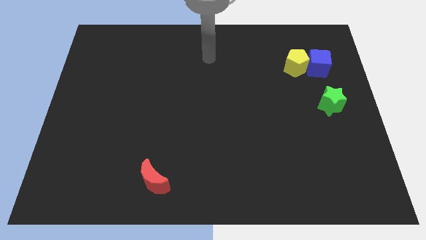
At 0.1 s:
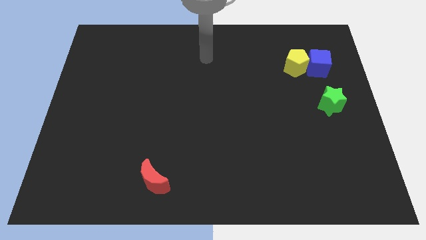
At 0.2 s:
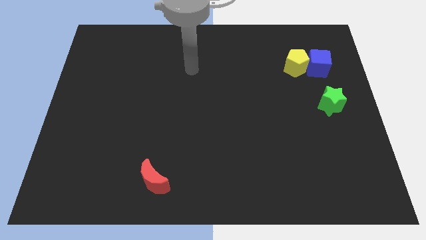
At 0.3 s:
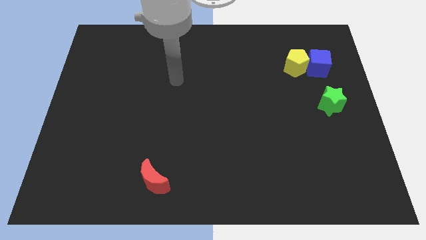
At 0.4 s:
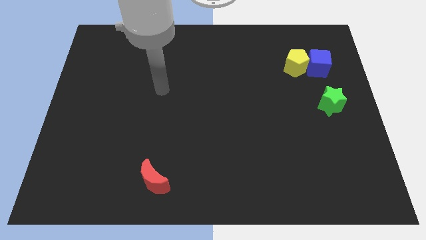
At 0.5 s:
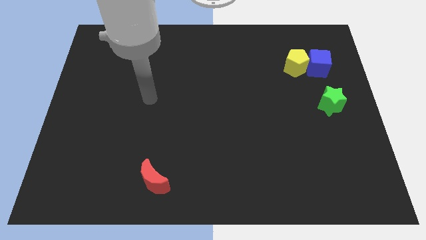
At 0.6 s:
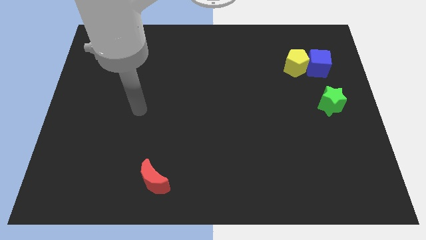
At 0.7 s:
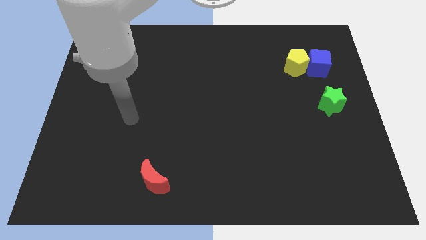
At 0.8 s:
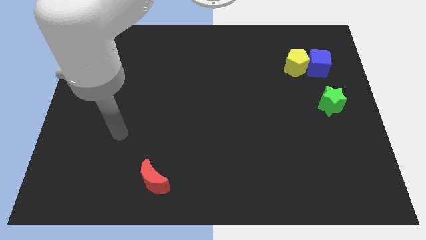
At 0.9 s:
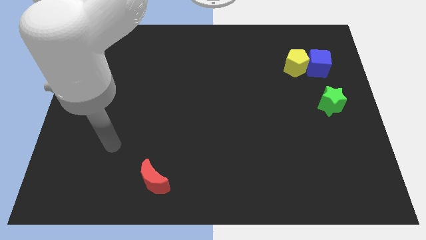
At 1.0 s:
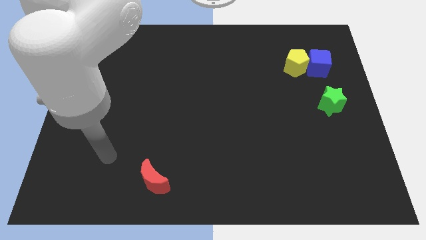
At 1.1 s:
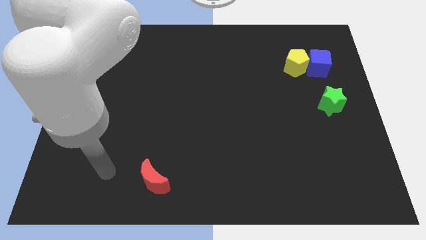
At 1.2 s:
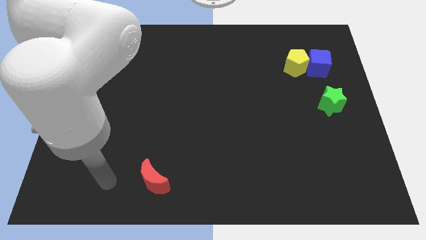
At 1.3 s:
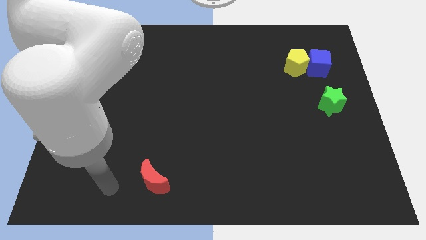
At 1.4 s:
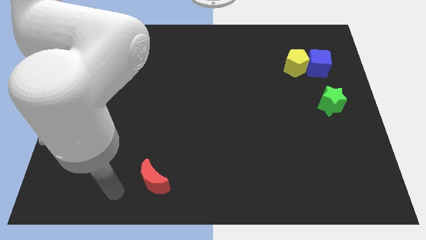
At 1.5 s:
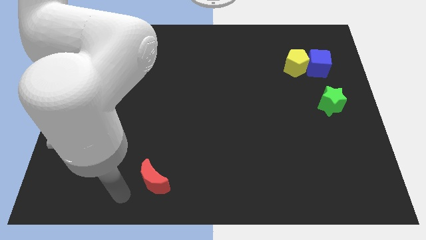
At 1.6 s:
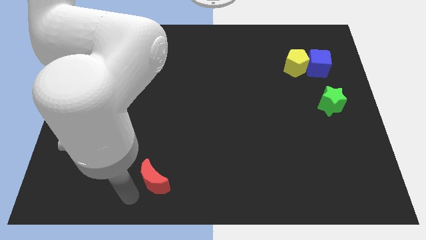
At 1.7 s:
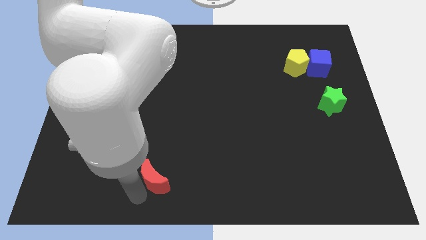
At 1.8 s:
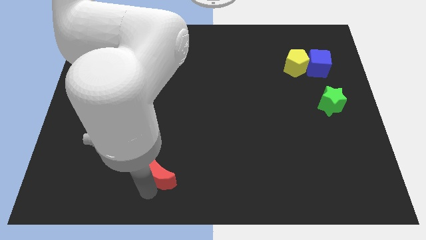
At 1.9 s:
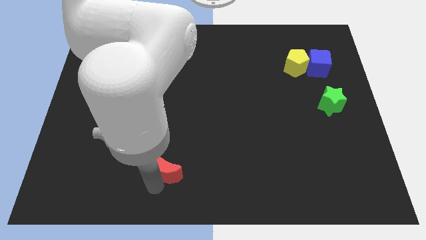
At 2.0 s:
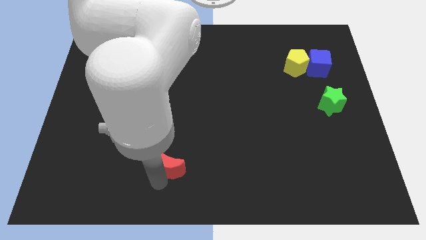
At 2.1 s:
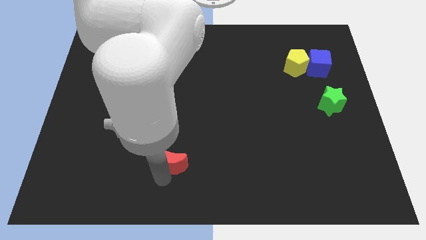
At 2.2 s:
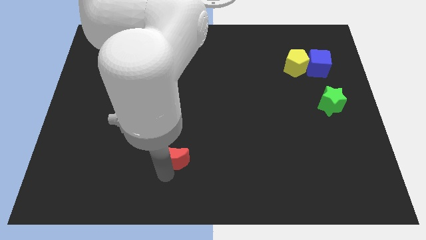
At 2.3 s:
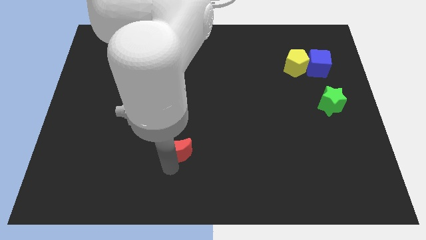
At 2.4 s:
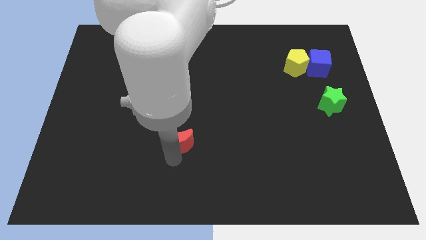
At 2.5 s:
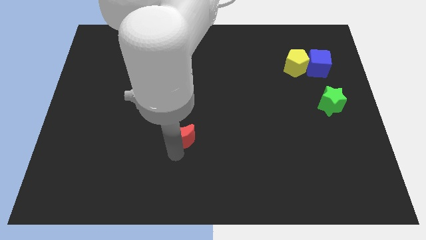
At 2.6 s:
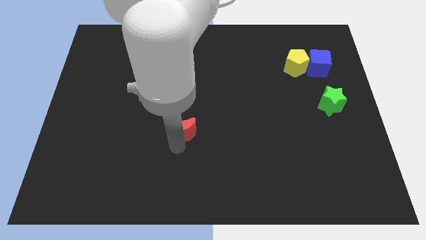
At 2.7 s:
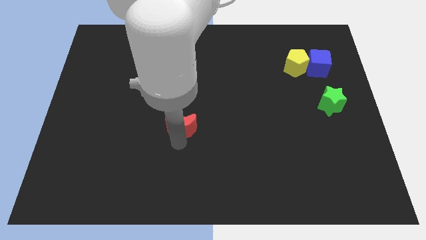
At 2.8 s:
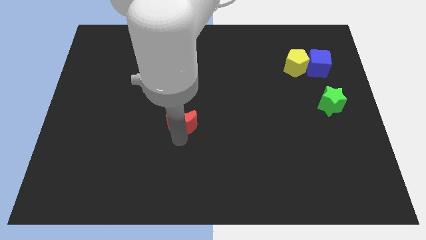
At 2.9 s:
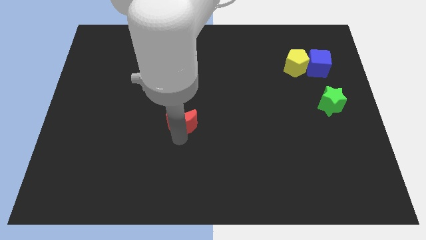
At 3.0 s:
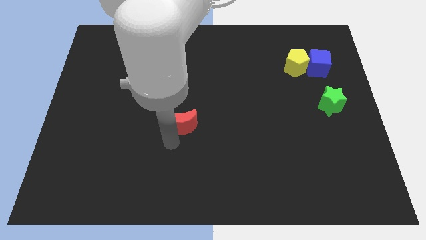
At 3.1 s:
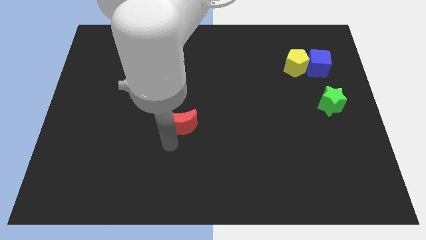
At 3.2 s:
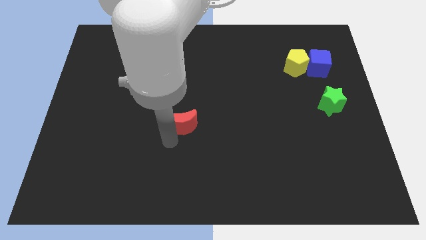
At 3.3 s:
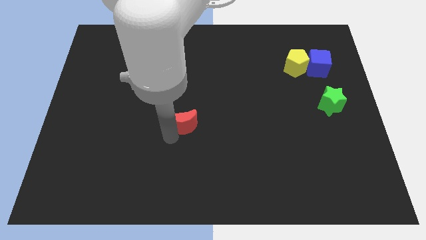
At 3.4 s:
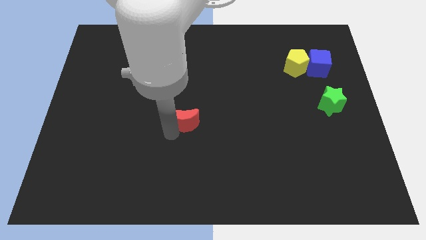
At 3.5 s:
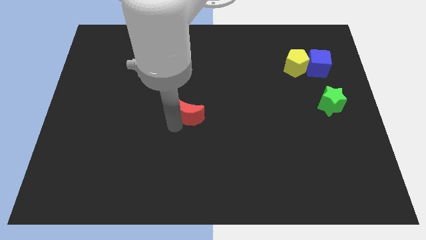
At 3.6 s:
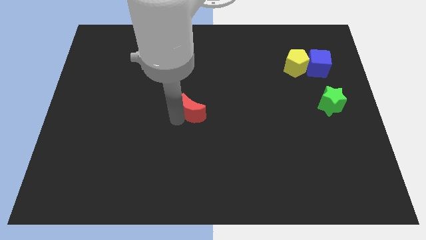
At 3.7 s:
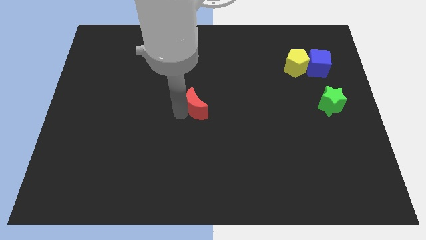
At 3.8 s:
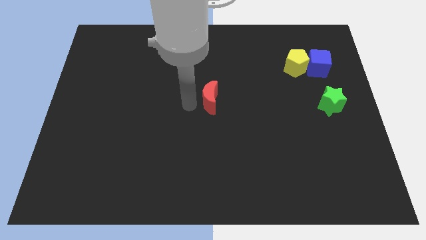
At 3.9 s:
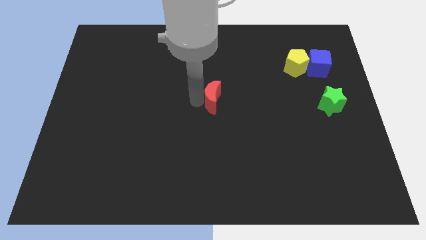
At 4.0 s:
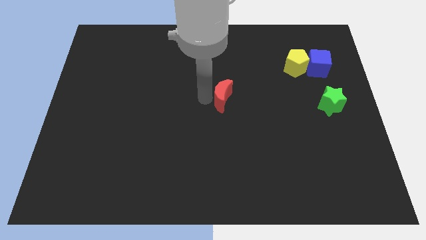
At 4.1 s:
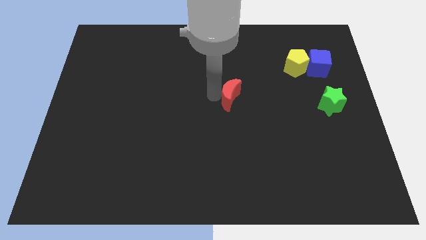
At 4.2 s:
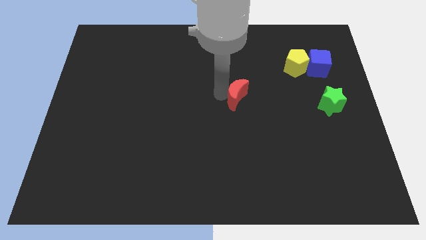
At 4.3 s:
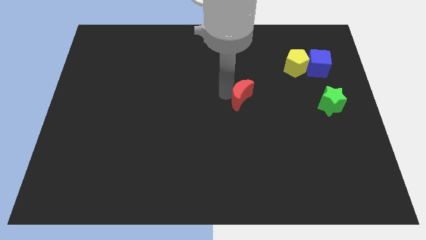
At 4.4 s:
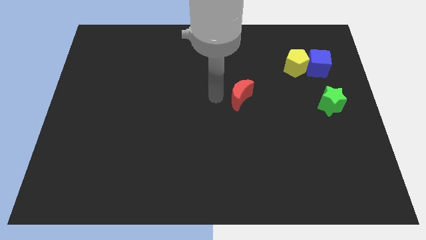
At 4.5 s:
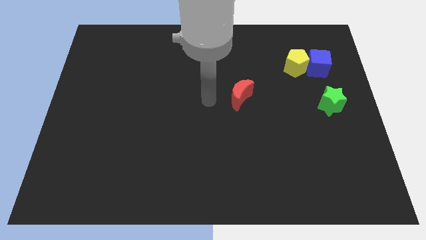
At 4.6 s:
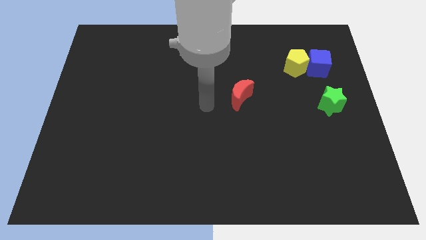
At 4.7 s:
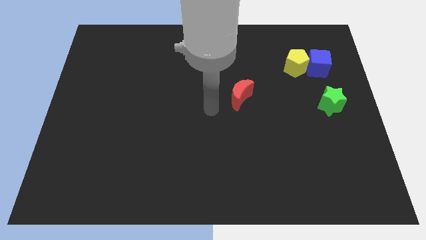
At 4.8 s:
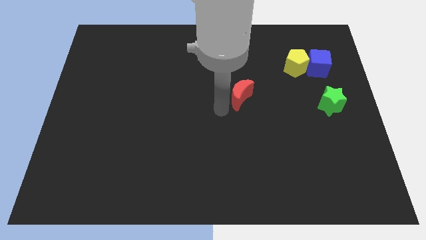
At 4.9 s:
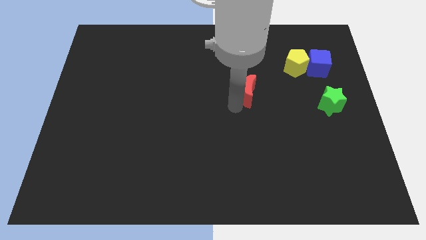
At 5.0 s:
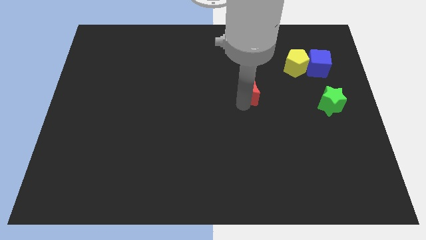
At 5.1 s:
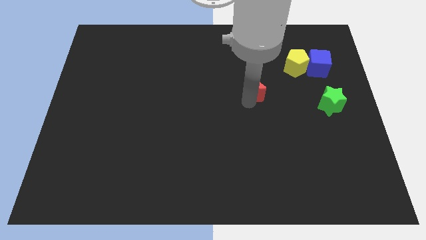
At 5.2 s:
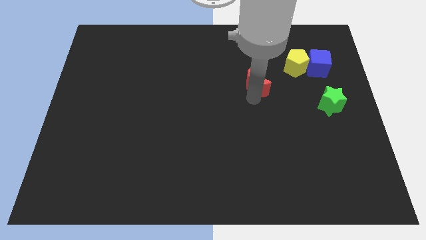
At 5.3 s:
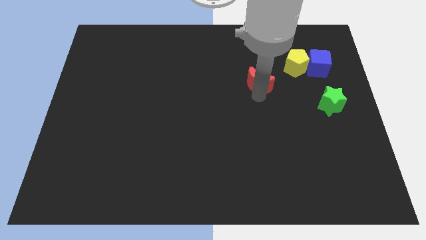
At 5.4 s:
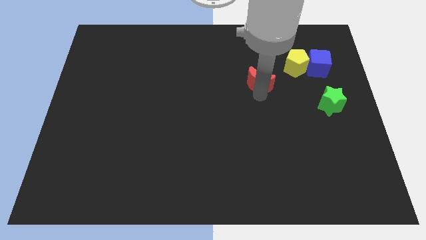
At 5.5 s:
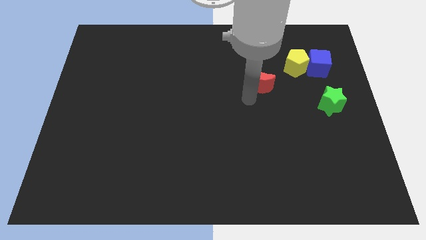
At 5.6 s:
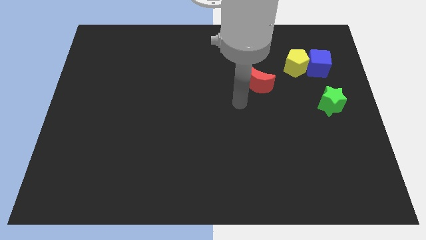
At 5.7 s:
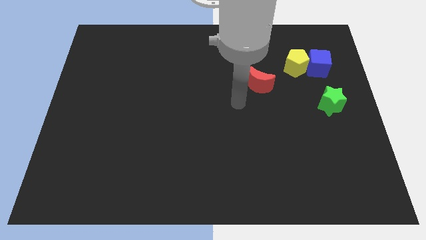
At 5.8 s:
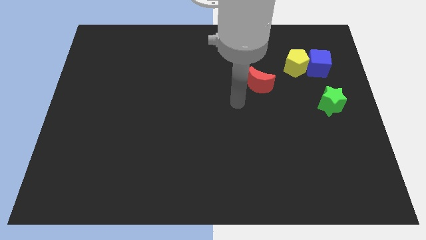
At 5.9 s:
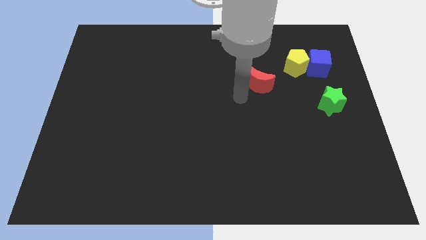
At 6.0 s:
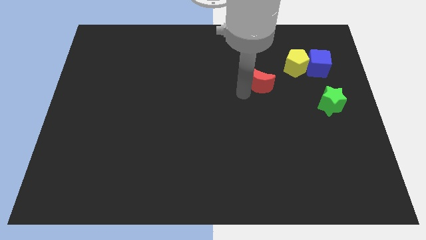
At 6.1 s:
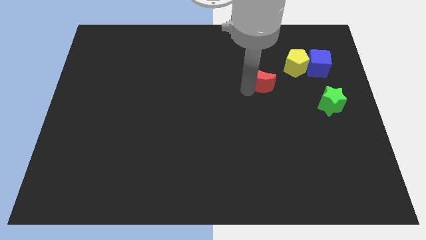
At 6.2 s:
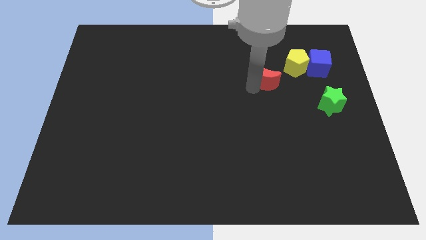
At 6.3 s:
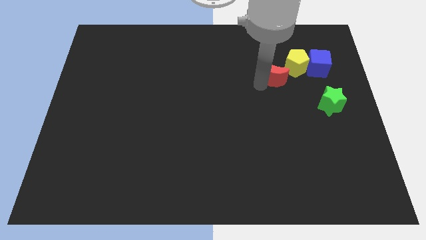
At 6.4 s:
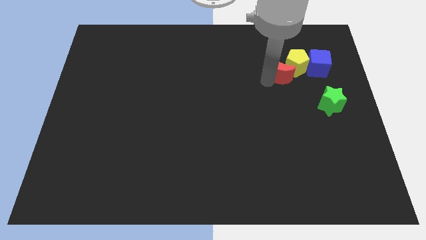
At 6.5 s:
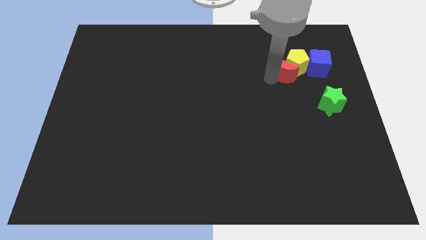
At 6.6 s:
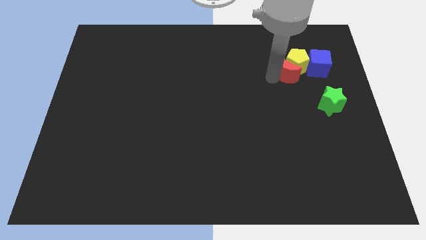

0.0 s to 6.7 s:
put the red moon towards the pentagon

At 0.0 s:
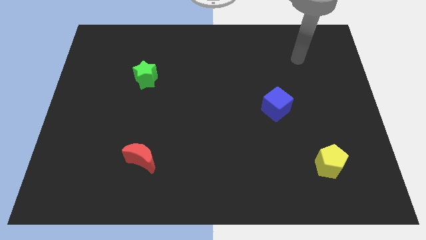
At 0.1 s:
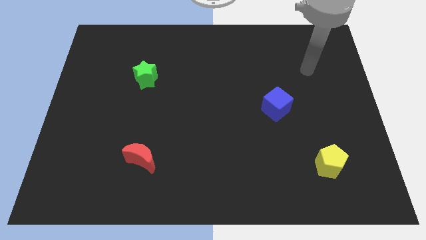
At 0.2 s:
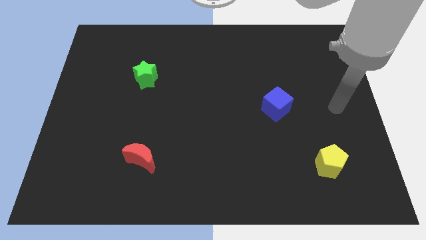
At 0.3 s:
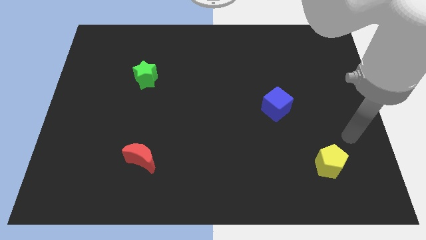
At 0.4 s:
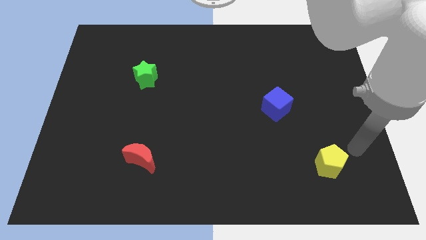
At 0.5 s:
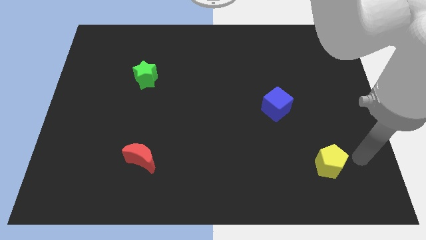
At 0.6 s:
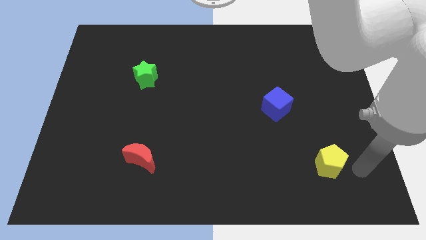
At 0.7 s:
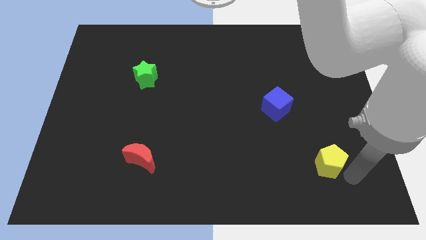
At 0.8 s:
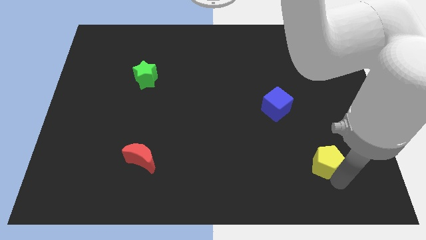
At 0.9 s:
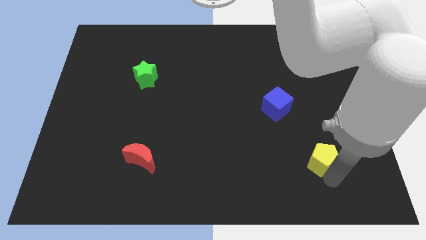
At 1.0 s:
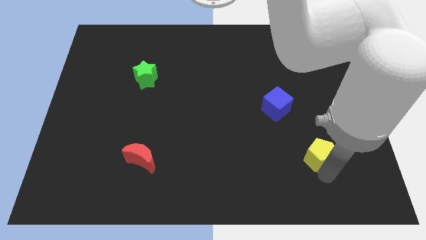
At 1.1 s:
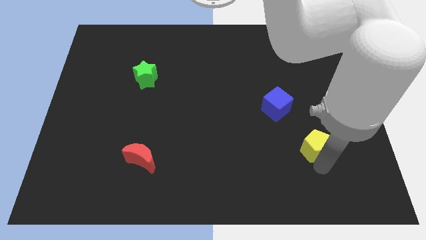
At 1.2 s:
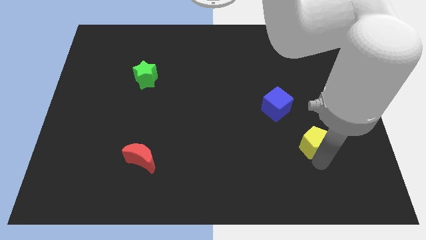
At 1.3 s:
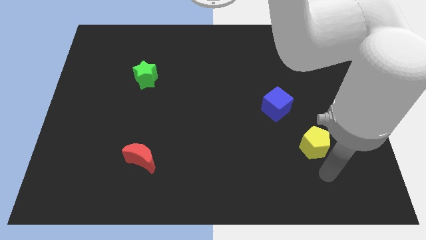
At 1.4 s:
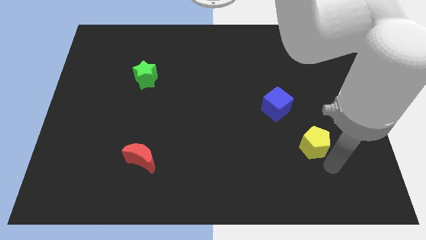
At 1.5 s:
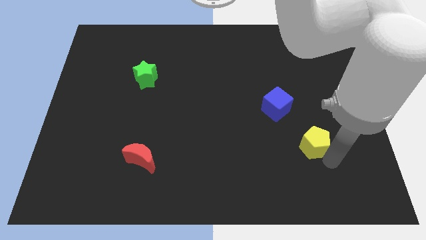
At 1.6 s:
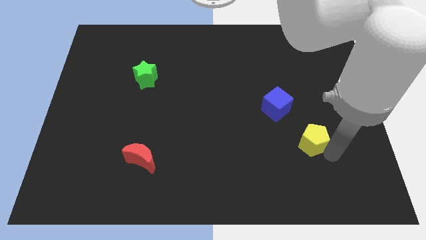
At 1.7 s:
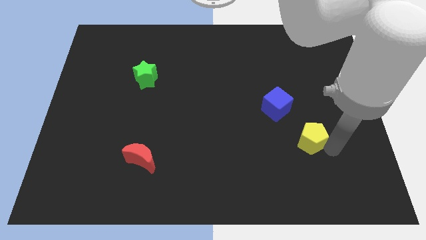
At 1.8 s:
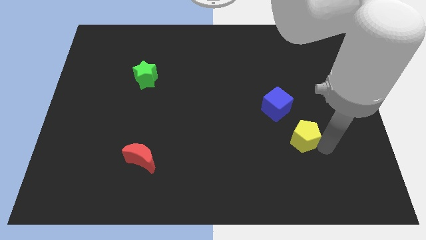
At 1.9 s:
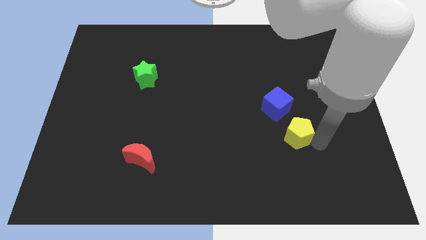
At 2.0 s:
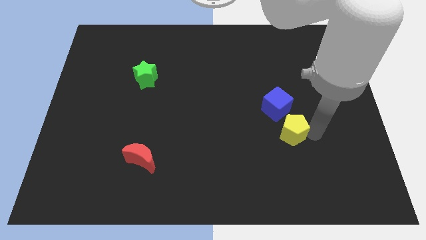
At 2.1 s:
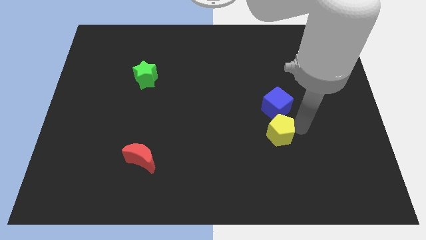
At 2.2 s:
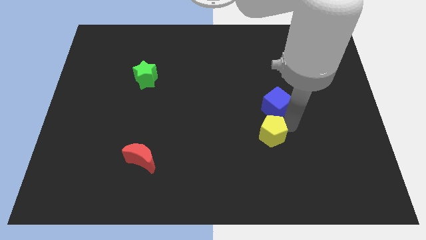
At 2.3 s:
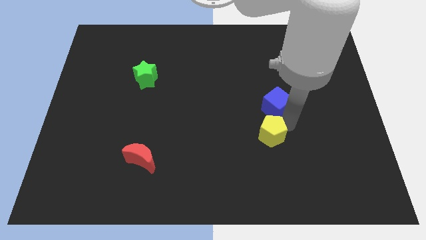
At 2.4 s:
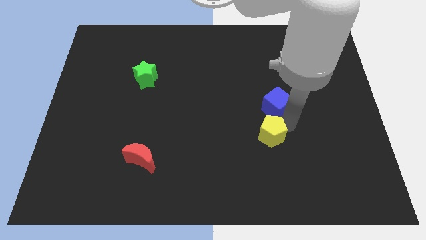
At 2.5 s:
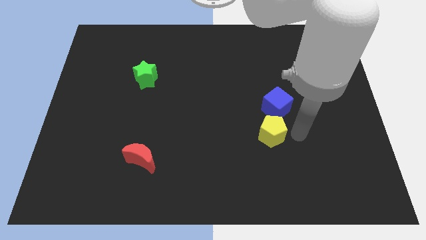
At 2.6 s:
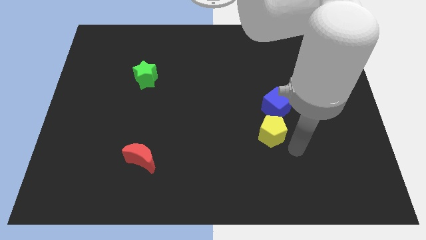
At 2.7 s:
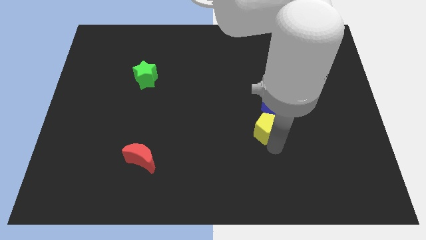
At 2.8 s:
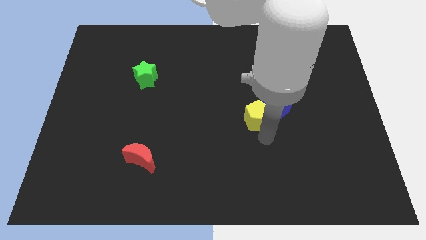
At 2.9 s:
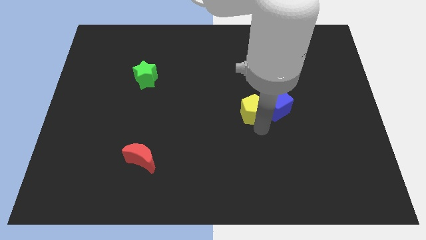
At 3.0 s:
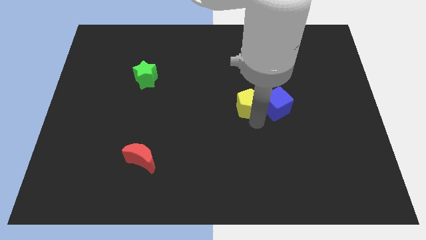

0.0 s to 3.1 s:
put the yellow pentagon to the cube
